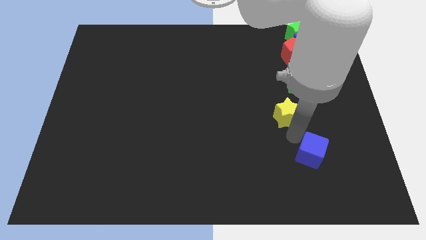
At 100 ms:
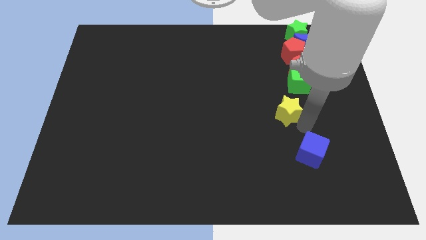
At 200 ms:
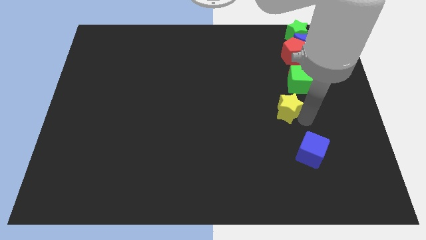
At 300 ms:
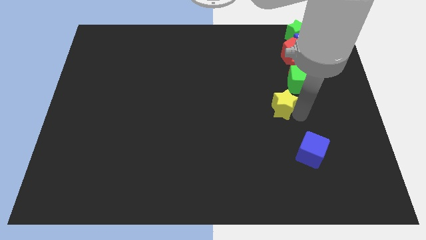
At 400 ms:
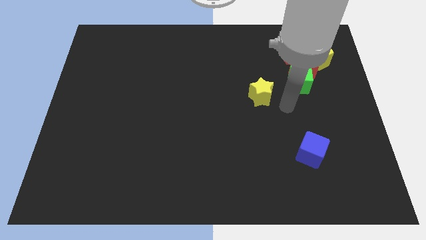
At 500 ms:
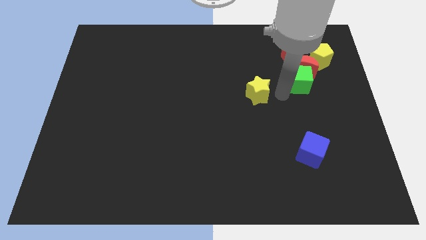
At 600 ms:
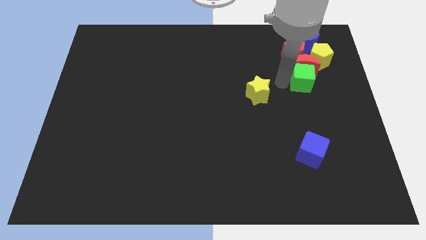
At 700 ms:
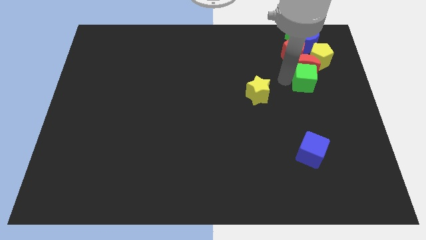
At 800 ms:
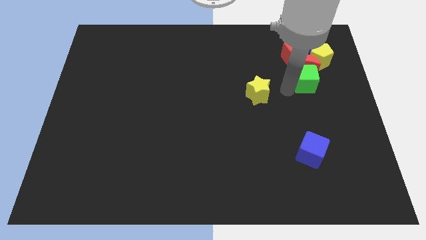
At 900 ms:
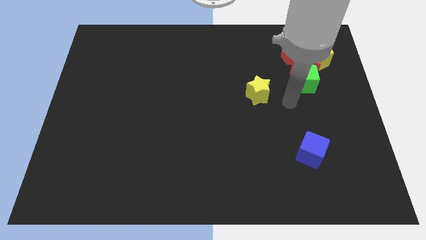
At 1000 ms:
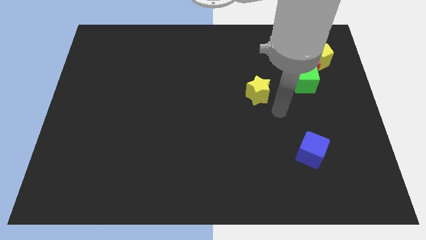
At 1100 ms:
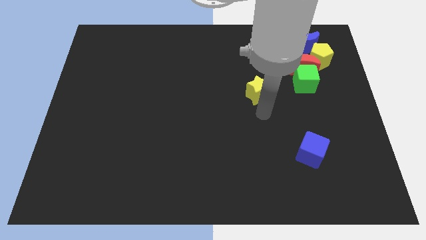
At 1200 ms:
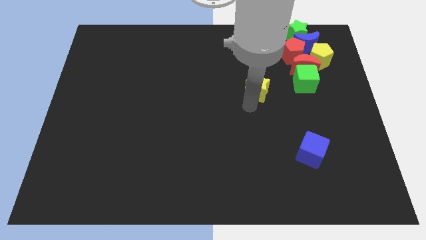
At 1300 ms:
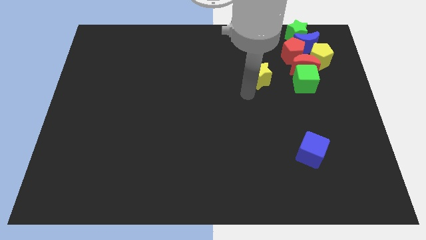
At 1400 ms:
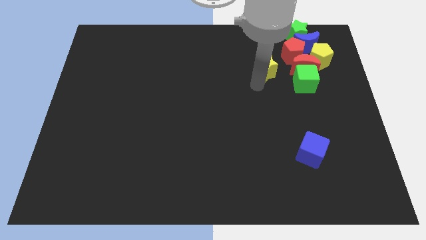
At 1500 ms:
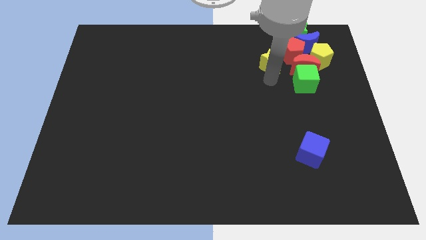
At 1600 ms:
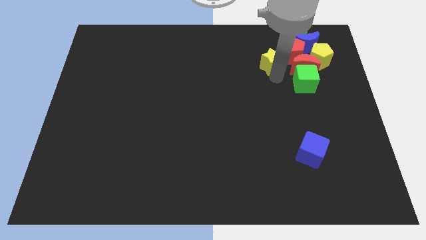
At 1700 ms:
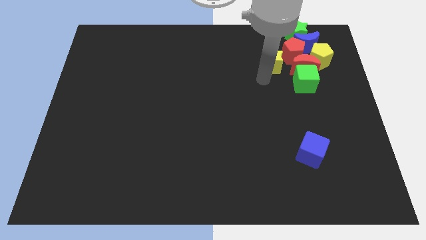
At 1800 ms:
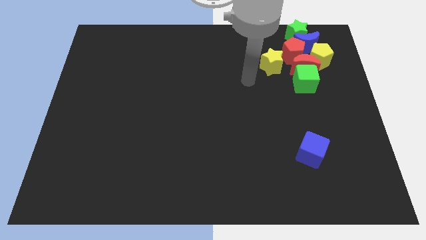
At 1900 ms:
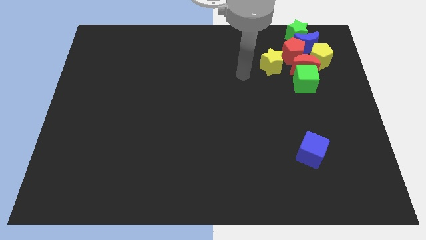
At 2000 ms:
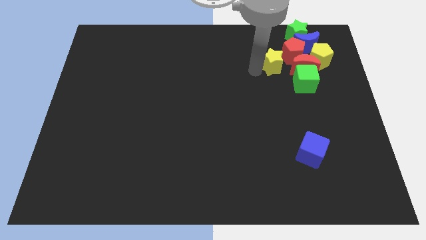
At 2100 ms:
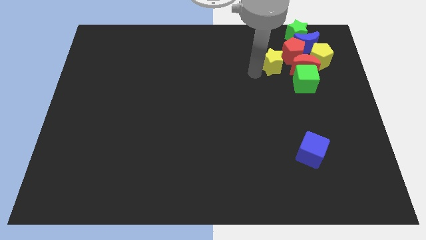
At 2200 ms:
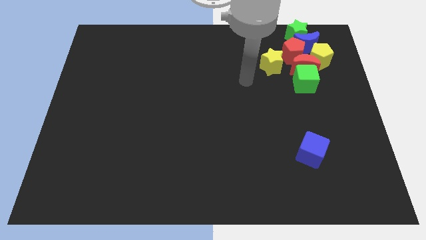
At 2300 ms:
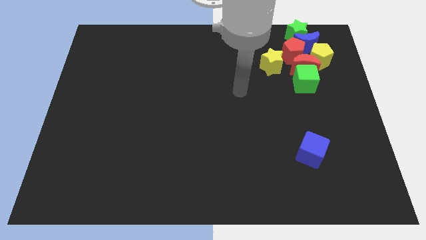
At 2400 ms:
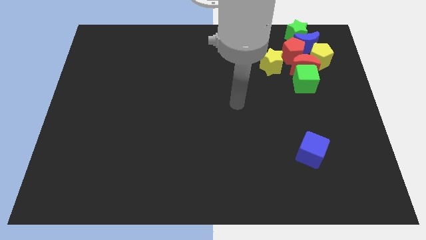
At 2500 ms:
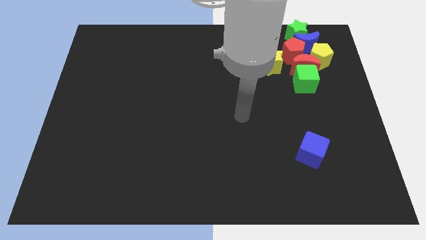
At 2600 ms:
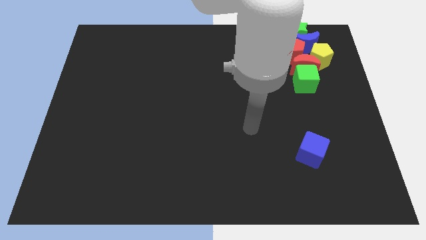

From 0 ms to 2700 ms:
move the yellow star left to the red crescent

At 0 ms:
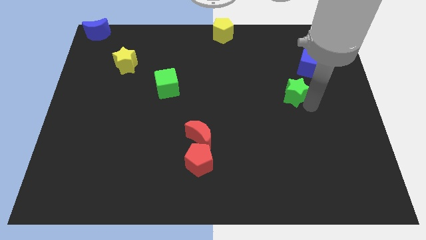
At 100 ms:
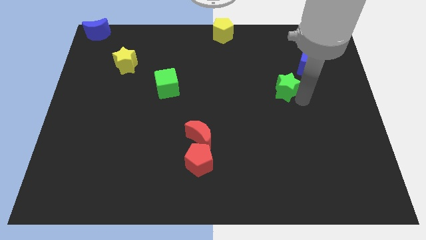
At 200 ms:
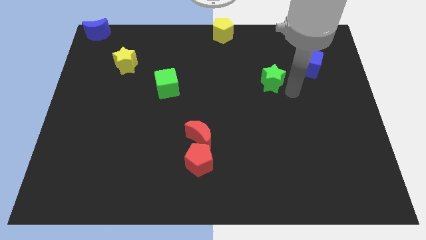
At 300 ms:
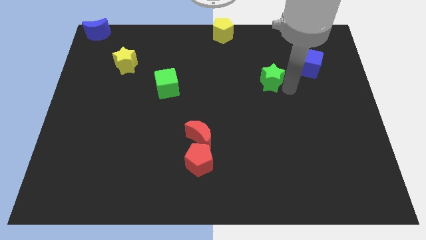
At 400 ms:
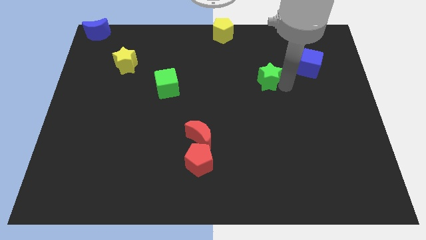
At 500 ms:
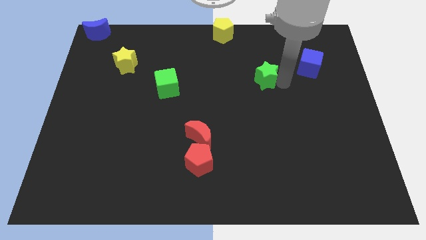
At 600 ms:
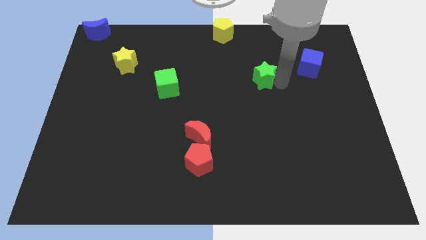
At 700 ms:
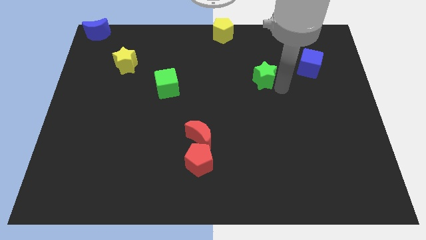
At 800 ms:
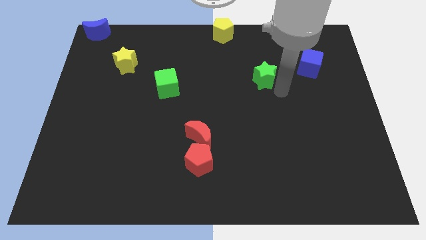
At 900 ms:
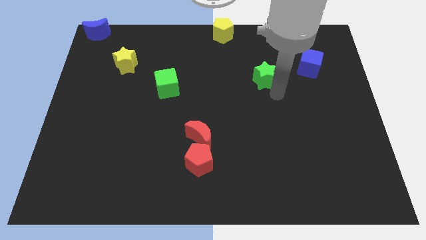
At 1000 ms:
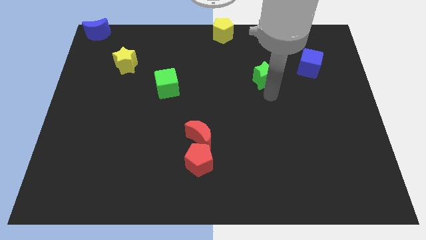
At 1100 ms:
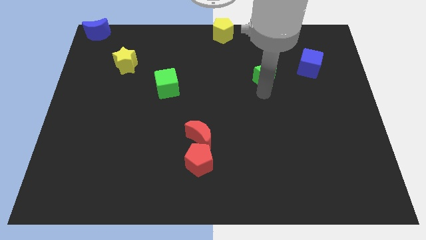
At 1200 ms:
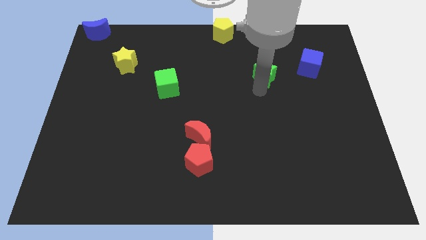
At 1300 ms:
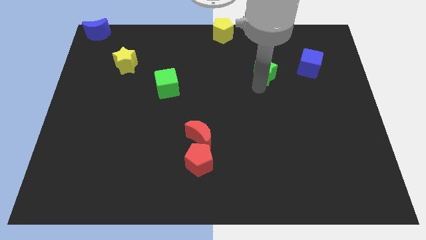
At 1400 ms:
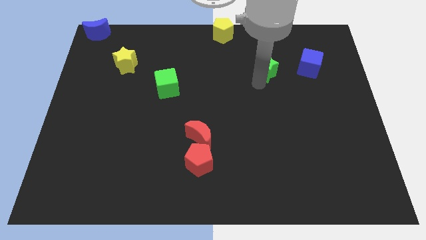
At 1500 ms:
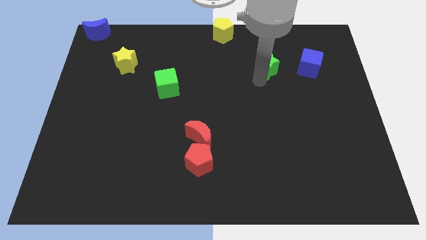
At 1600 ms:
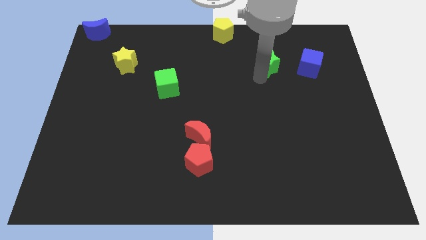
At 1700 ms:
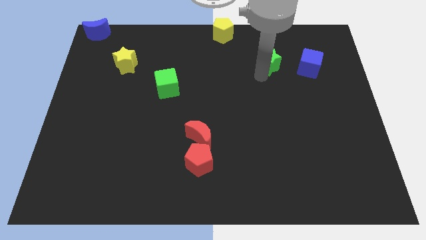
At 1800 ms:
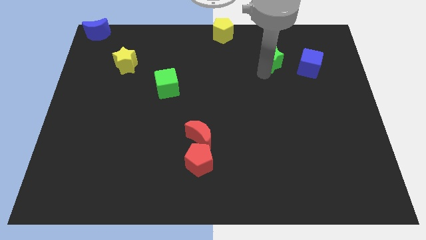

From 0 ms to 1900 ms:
place the green star to the left of the blue cube

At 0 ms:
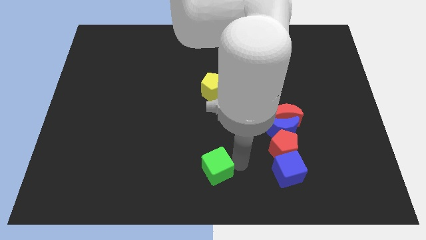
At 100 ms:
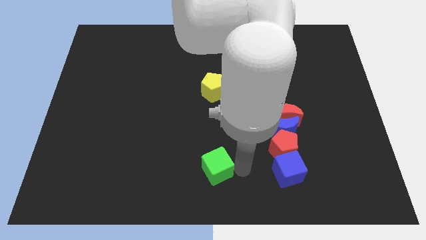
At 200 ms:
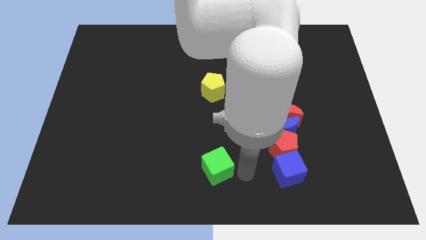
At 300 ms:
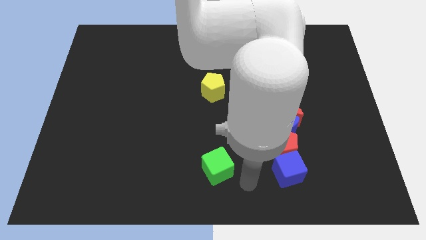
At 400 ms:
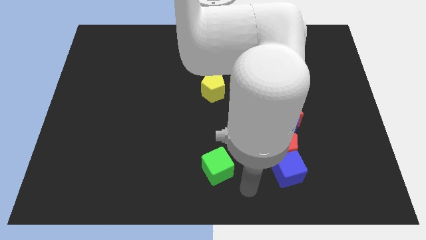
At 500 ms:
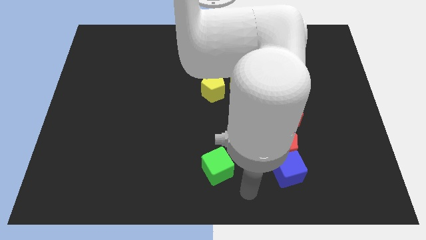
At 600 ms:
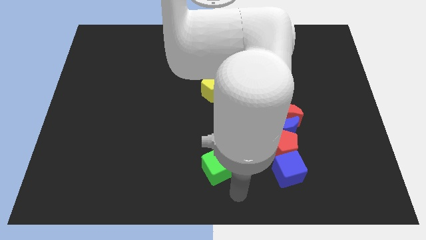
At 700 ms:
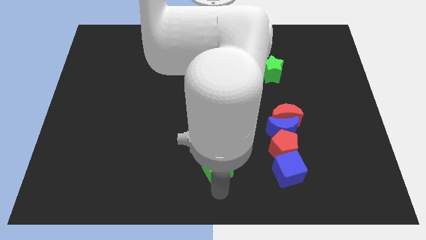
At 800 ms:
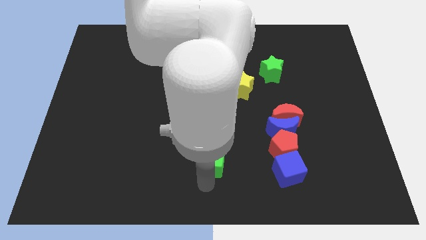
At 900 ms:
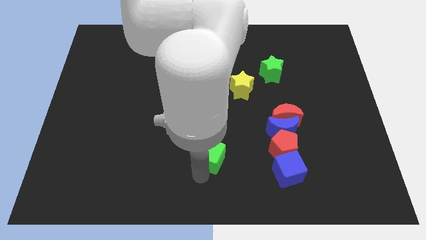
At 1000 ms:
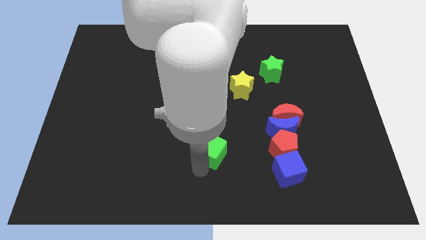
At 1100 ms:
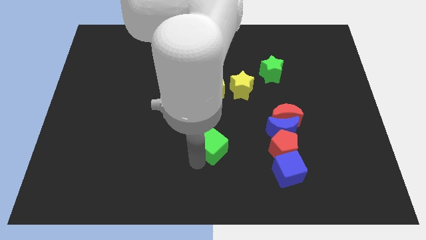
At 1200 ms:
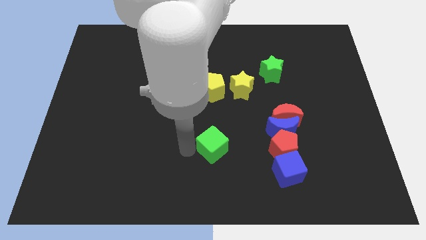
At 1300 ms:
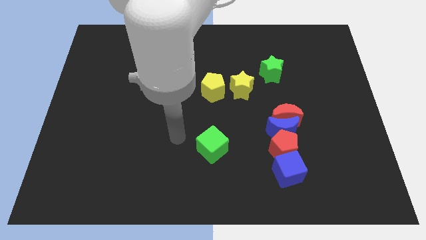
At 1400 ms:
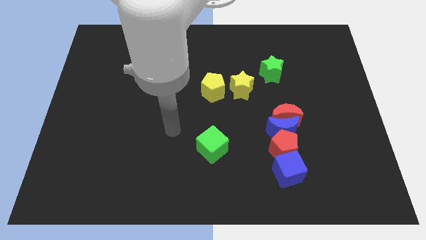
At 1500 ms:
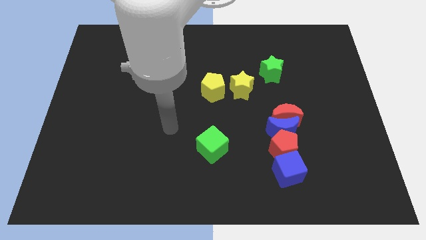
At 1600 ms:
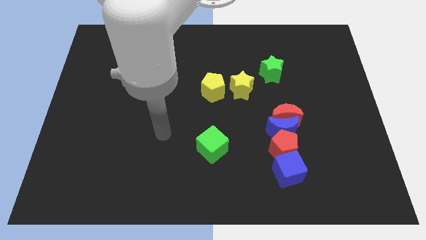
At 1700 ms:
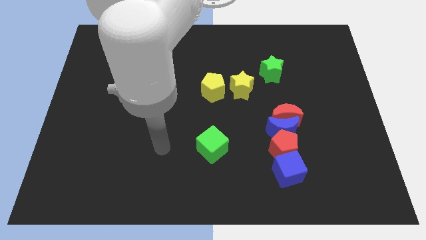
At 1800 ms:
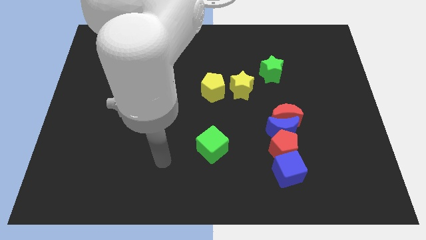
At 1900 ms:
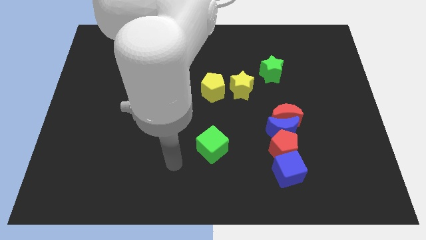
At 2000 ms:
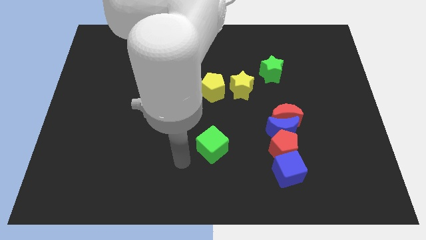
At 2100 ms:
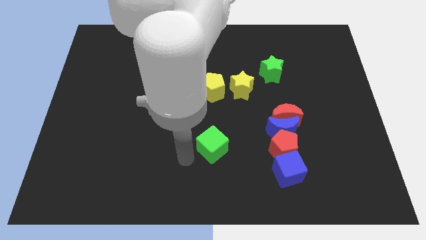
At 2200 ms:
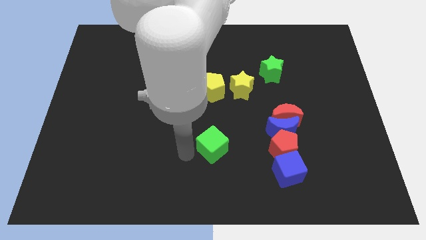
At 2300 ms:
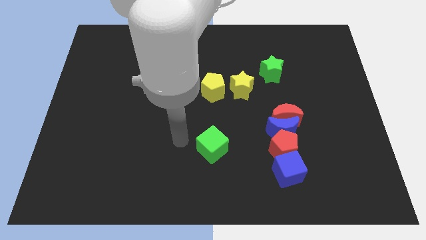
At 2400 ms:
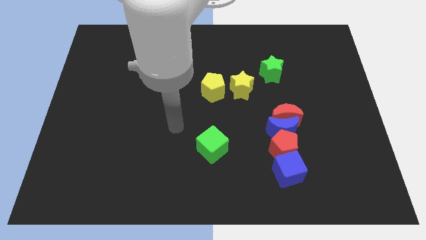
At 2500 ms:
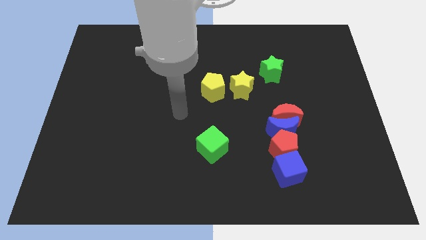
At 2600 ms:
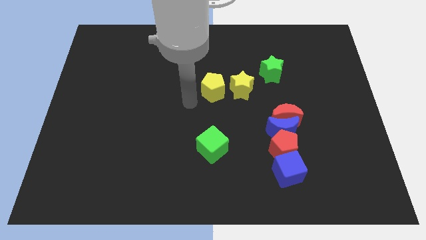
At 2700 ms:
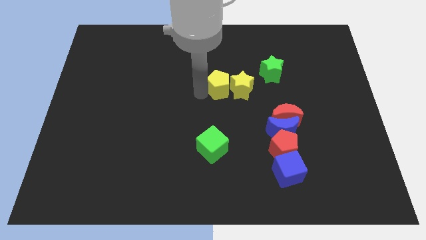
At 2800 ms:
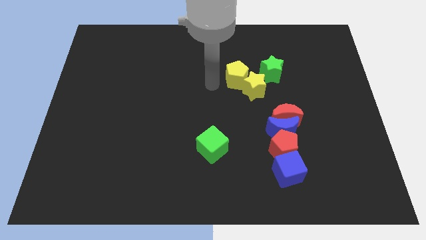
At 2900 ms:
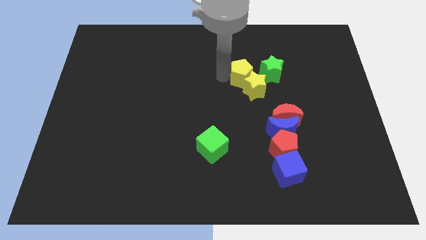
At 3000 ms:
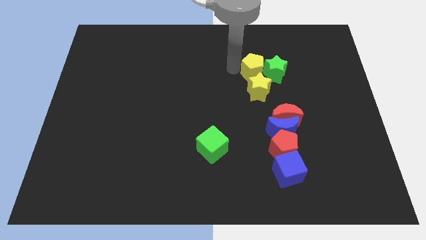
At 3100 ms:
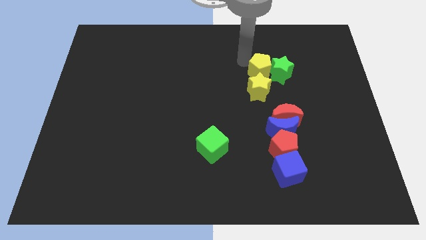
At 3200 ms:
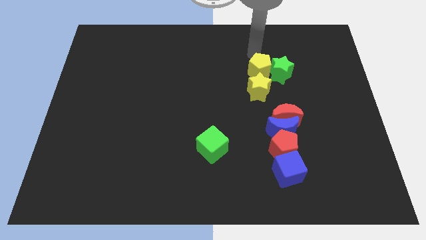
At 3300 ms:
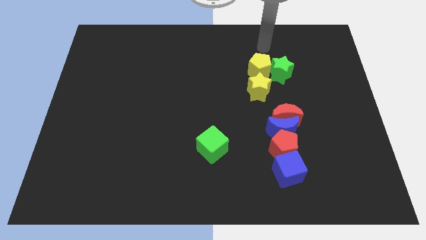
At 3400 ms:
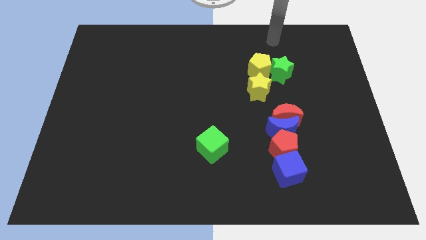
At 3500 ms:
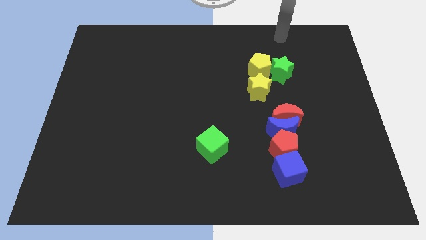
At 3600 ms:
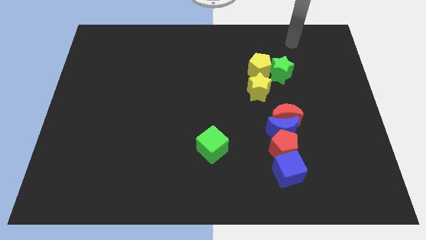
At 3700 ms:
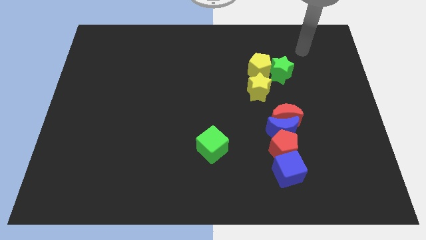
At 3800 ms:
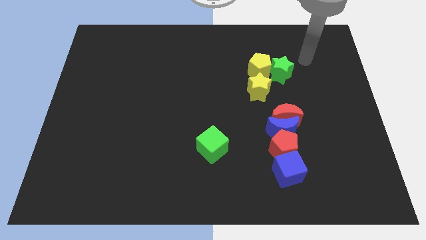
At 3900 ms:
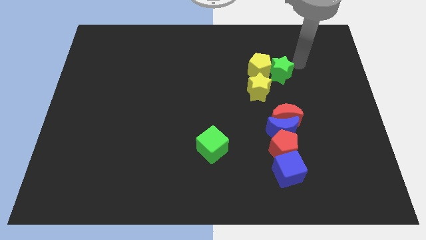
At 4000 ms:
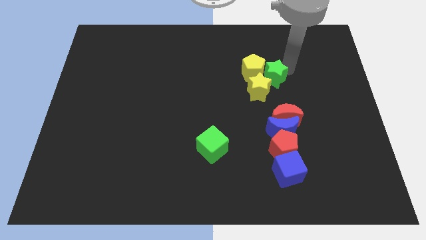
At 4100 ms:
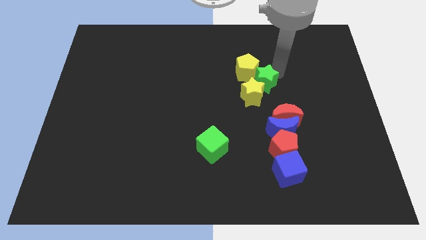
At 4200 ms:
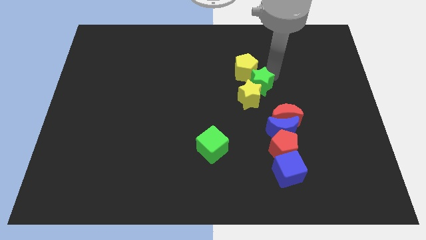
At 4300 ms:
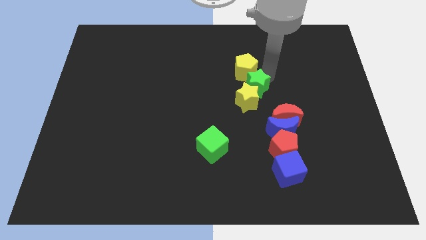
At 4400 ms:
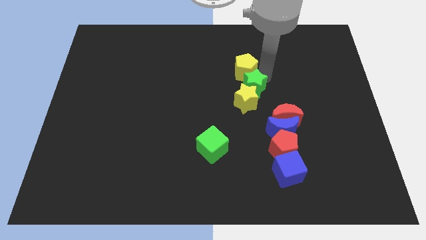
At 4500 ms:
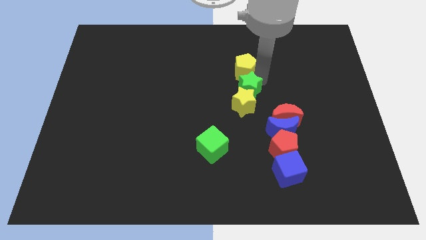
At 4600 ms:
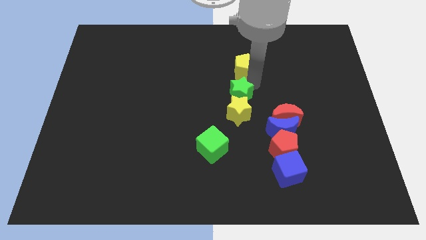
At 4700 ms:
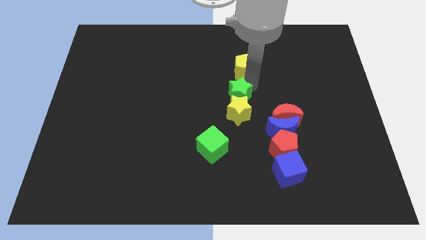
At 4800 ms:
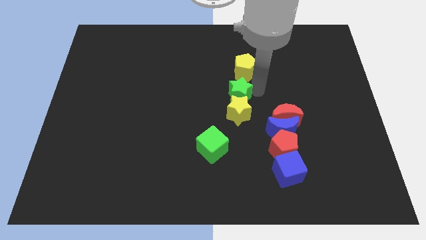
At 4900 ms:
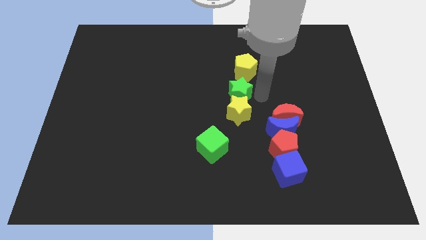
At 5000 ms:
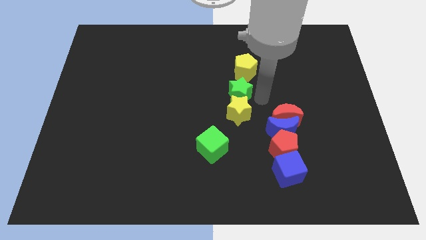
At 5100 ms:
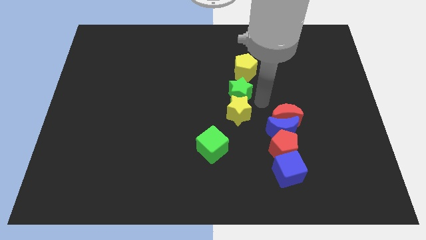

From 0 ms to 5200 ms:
drag the green star and place it in between yellow blocks
